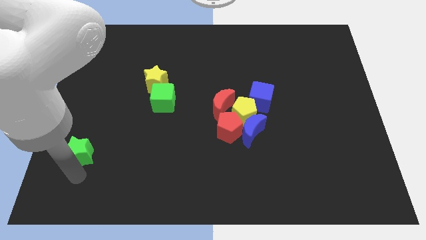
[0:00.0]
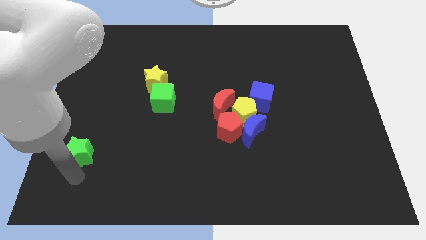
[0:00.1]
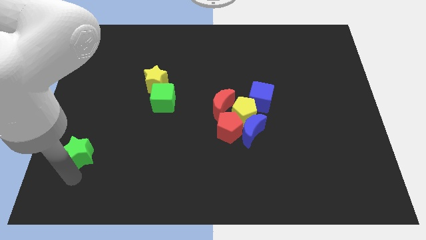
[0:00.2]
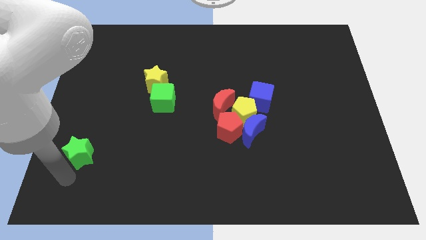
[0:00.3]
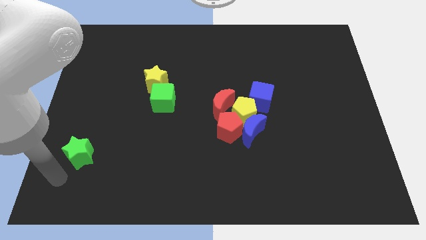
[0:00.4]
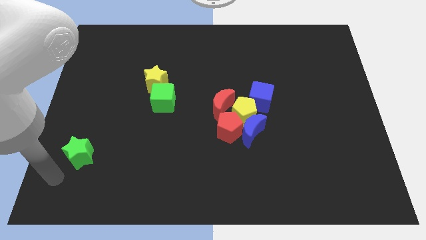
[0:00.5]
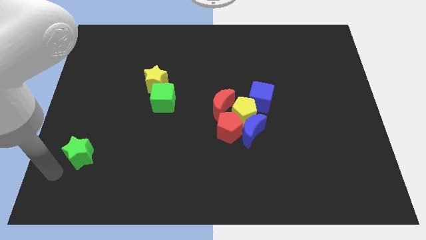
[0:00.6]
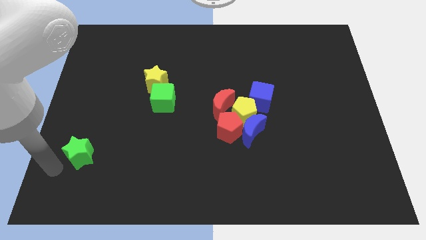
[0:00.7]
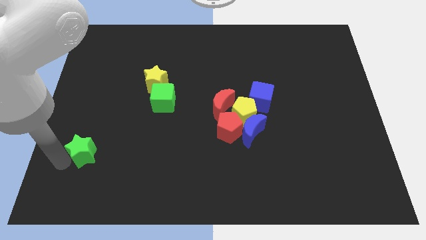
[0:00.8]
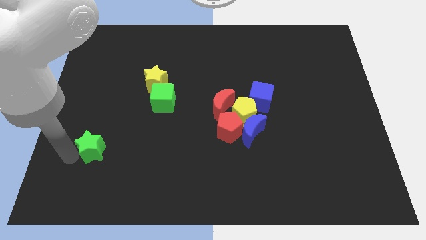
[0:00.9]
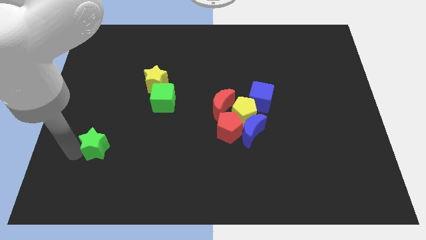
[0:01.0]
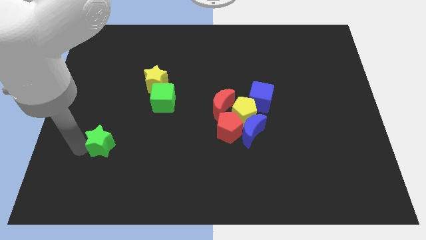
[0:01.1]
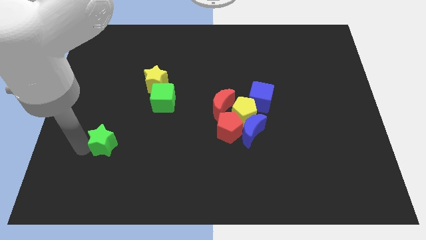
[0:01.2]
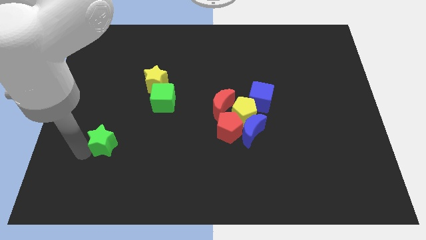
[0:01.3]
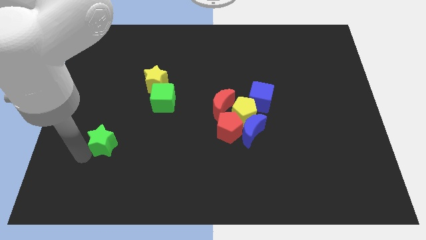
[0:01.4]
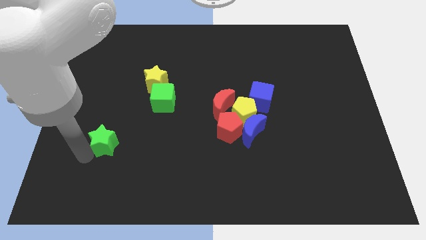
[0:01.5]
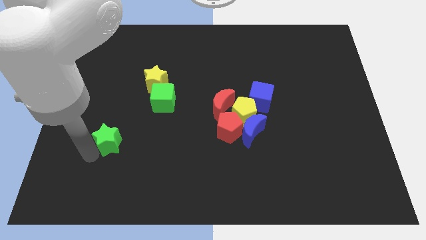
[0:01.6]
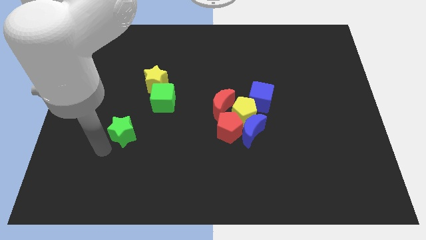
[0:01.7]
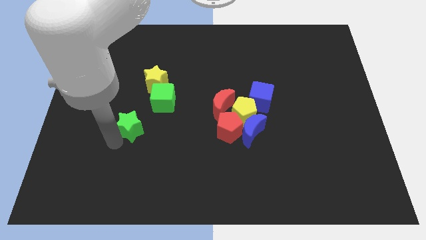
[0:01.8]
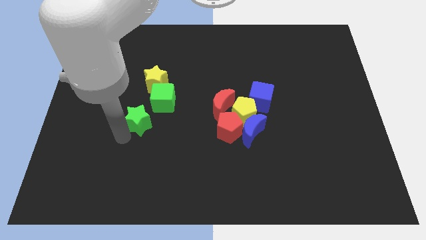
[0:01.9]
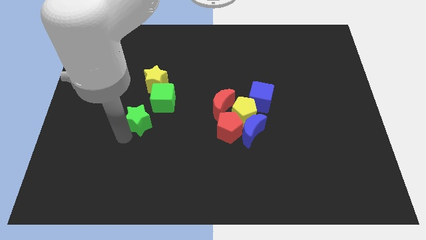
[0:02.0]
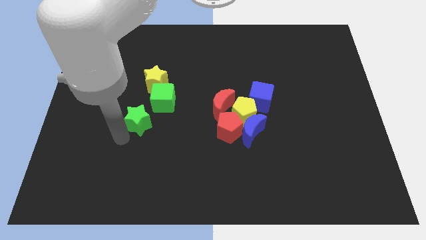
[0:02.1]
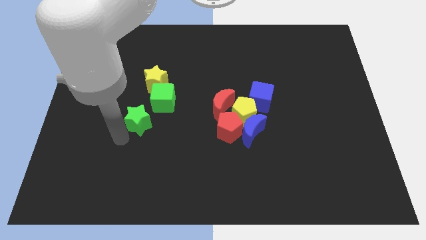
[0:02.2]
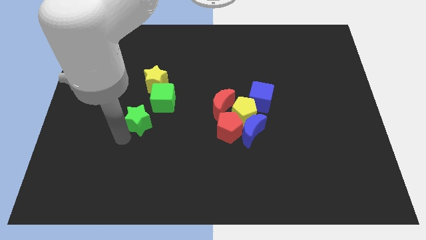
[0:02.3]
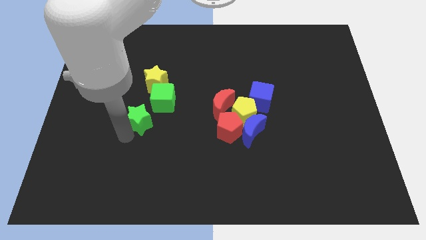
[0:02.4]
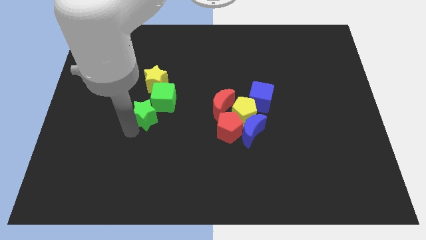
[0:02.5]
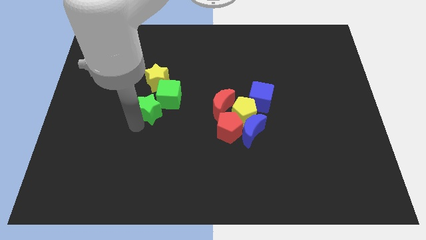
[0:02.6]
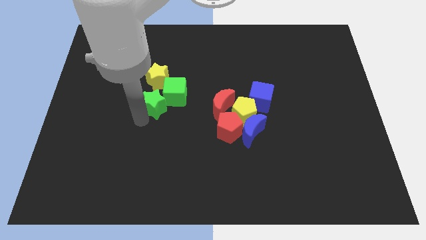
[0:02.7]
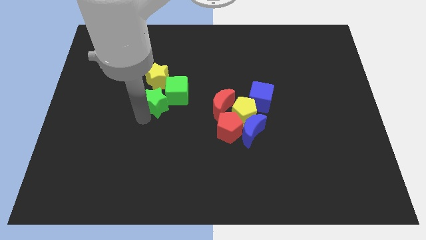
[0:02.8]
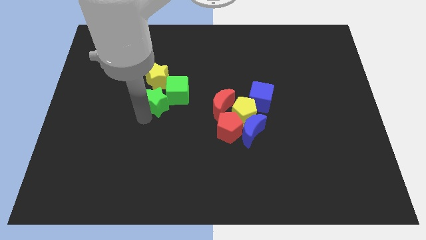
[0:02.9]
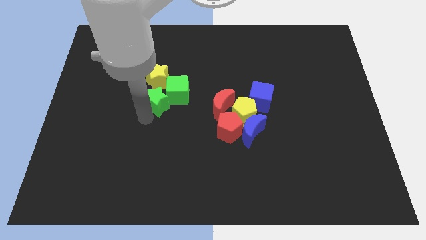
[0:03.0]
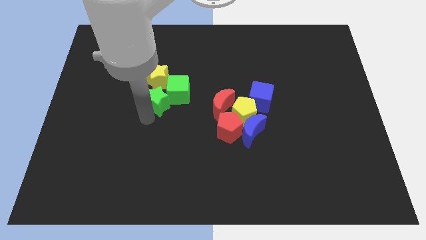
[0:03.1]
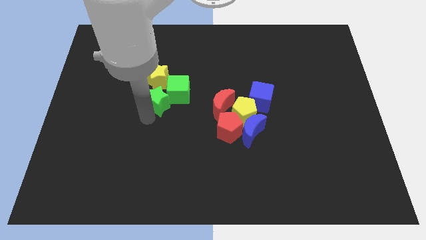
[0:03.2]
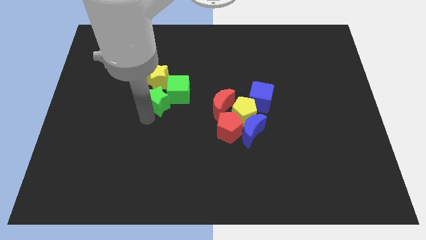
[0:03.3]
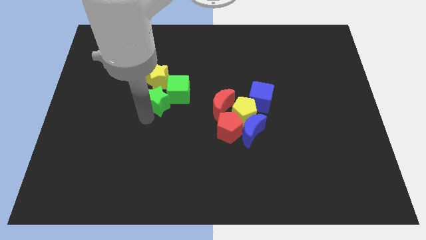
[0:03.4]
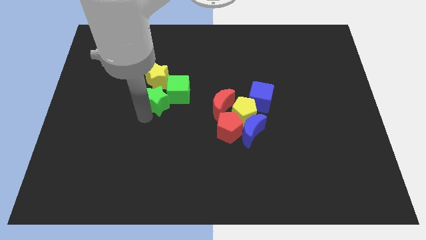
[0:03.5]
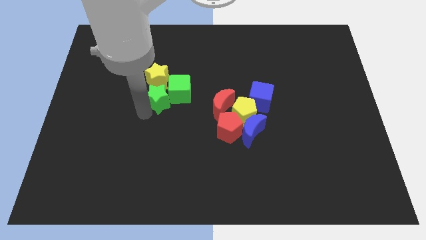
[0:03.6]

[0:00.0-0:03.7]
push the green star into the green cube

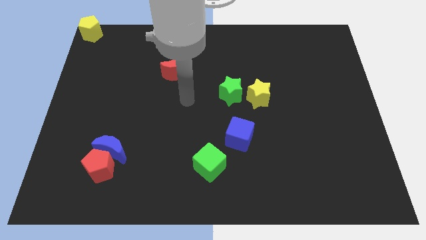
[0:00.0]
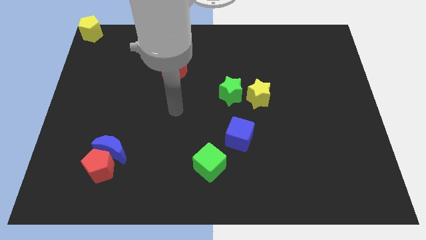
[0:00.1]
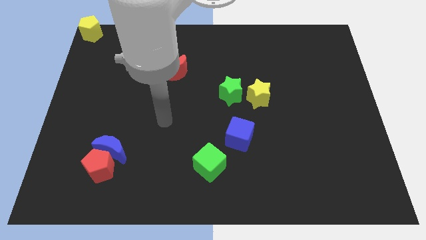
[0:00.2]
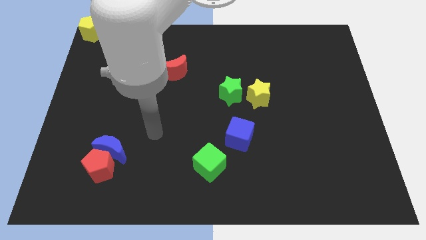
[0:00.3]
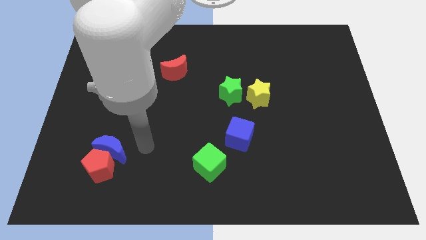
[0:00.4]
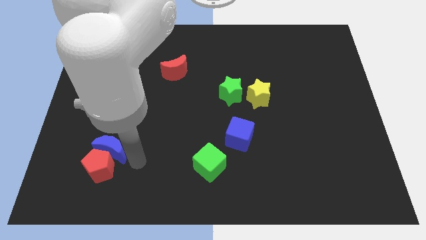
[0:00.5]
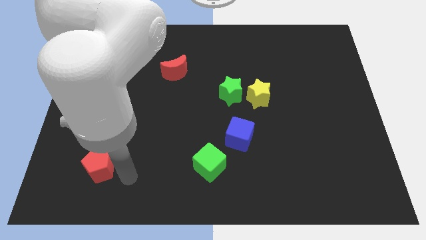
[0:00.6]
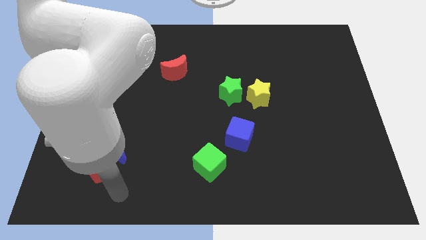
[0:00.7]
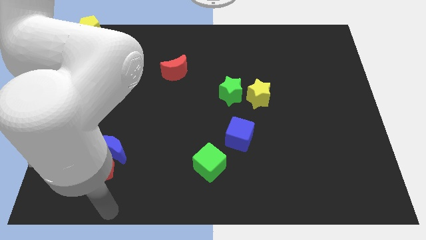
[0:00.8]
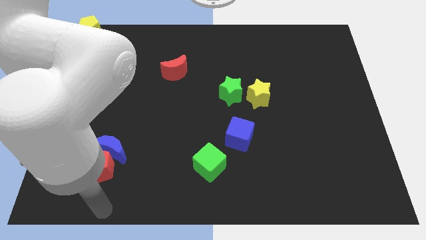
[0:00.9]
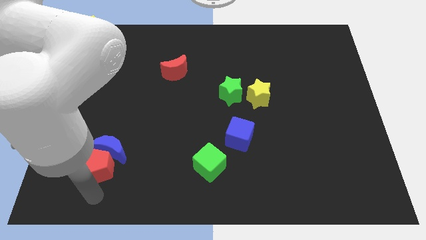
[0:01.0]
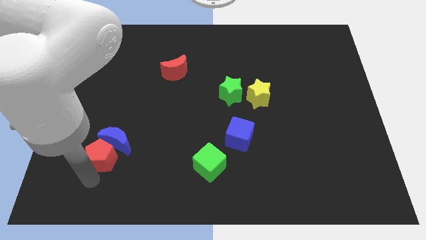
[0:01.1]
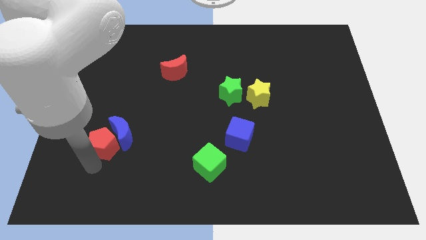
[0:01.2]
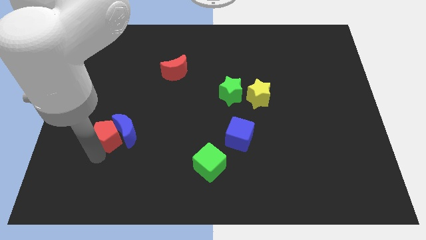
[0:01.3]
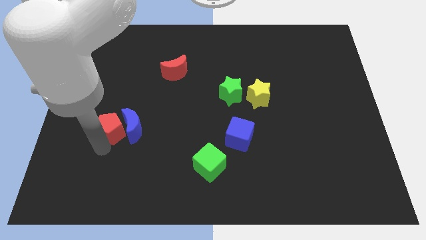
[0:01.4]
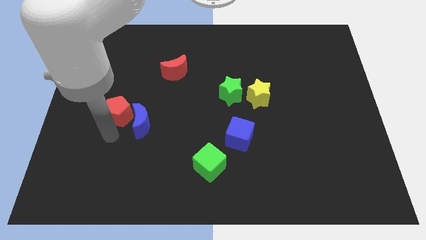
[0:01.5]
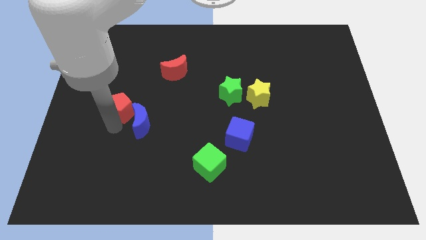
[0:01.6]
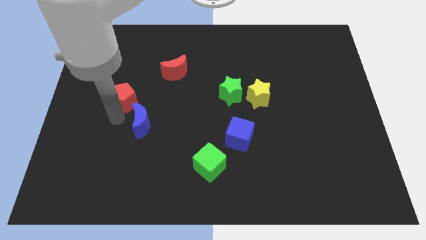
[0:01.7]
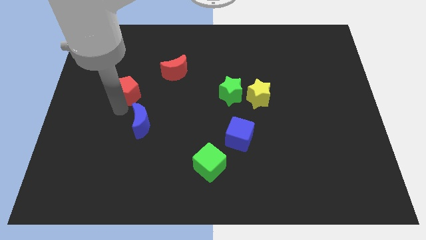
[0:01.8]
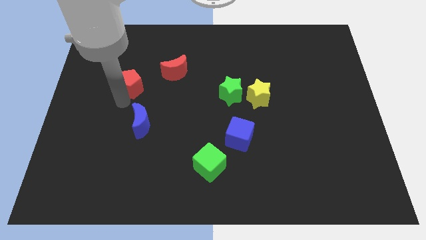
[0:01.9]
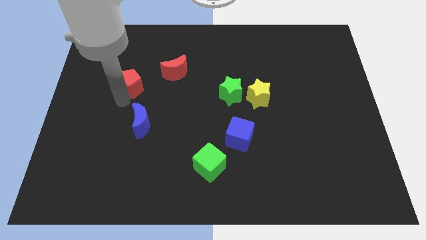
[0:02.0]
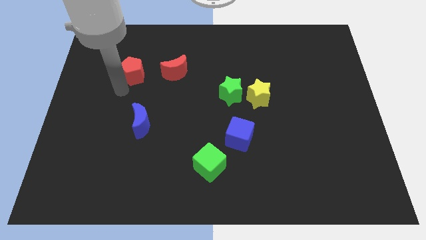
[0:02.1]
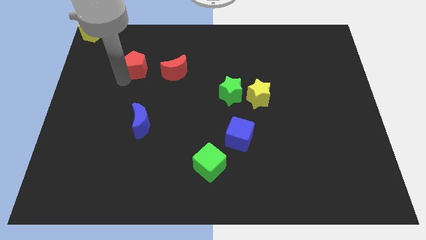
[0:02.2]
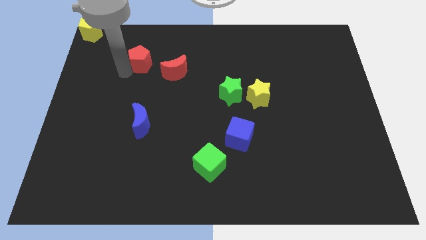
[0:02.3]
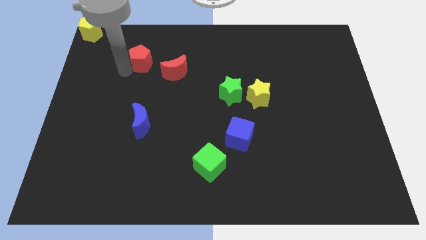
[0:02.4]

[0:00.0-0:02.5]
place red pentagon to the left of red moon

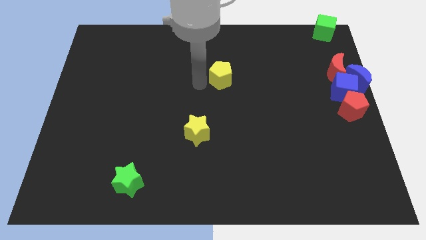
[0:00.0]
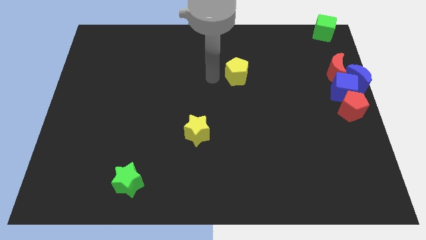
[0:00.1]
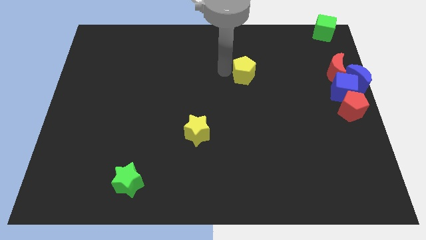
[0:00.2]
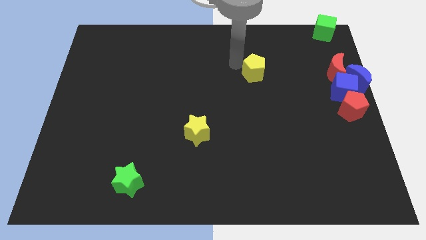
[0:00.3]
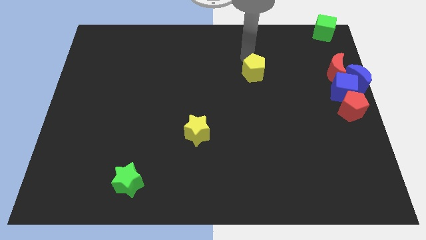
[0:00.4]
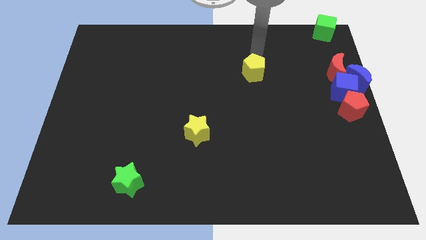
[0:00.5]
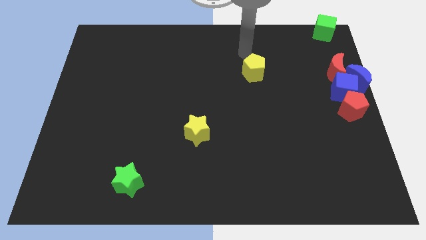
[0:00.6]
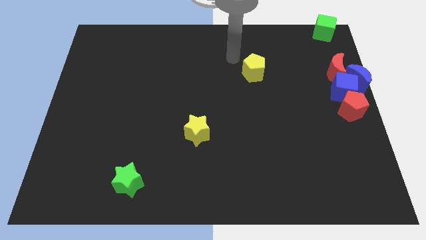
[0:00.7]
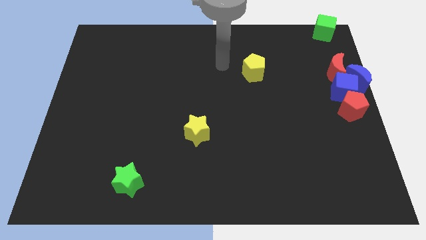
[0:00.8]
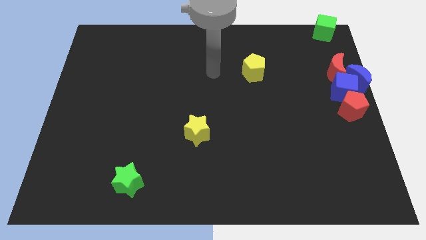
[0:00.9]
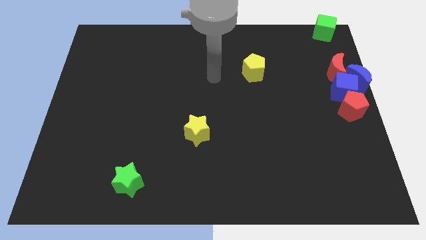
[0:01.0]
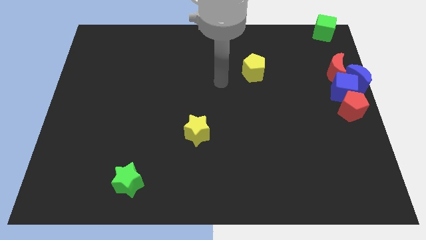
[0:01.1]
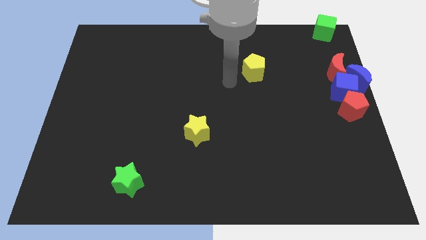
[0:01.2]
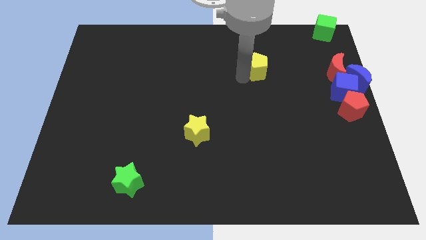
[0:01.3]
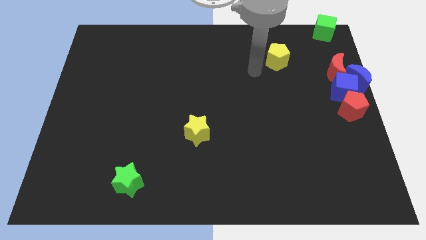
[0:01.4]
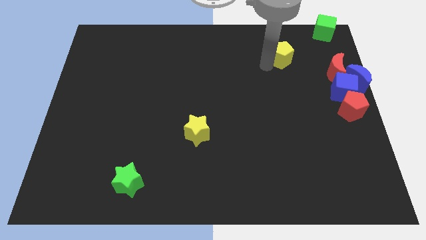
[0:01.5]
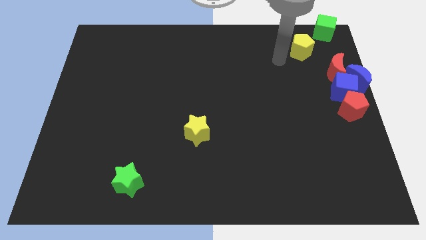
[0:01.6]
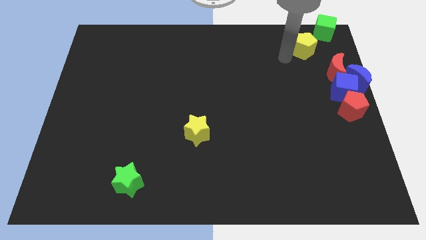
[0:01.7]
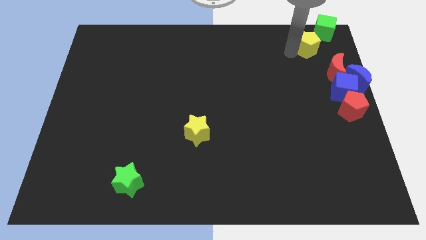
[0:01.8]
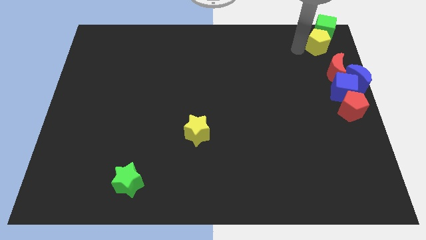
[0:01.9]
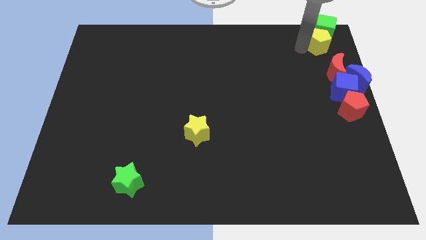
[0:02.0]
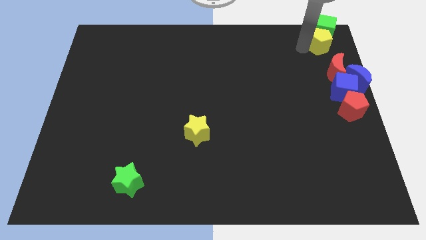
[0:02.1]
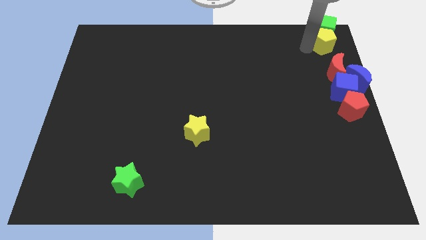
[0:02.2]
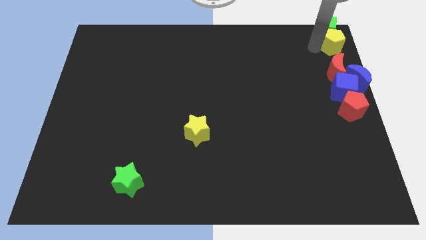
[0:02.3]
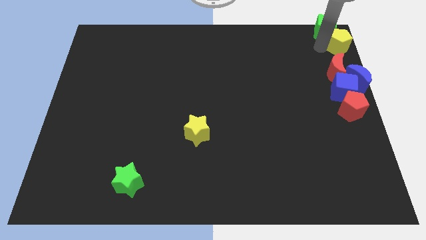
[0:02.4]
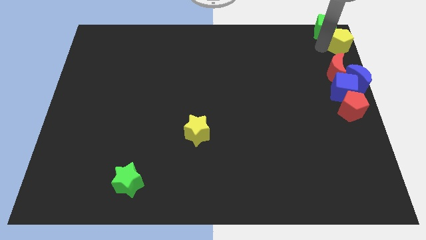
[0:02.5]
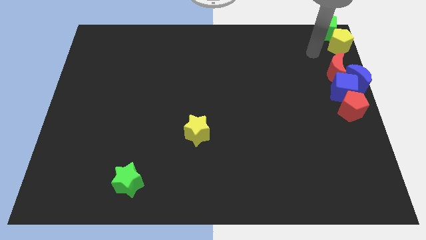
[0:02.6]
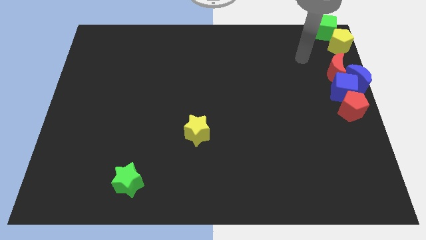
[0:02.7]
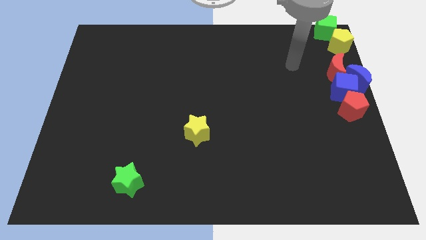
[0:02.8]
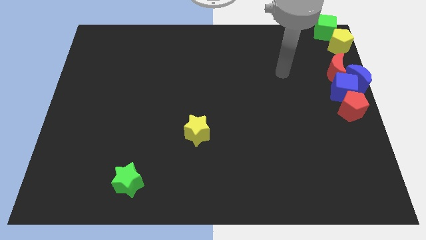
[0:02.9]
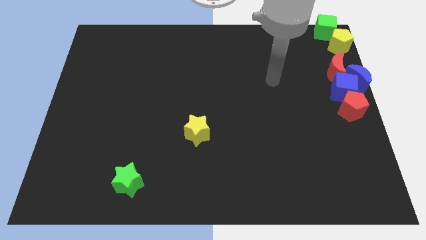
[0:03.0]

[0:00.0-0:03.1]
push the yellow pentagon to the top of the red crescent
